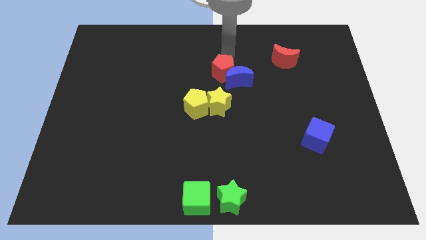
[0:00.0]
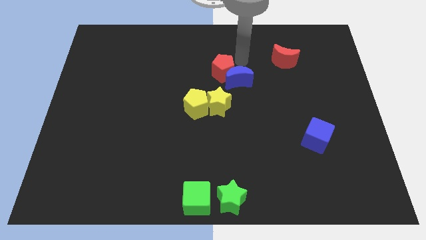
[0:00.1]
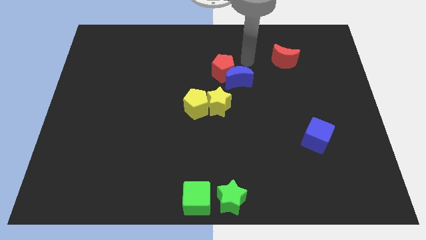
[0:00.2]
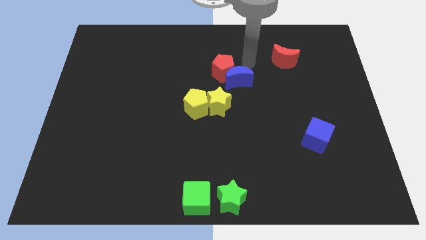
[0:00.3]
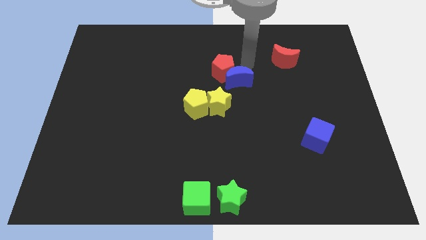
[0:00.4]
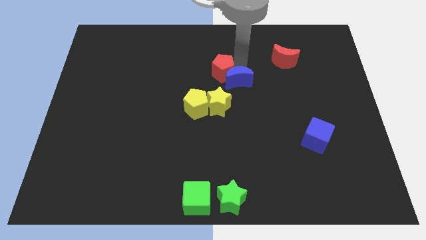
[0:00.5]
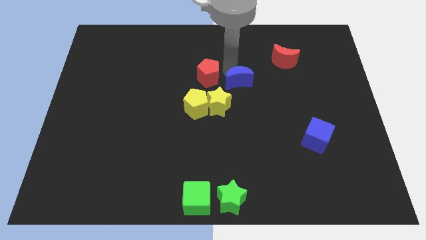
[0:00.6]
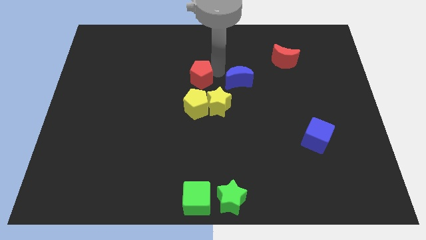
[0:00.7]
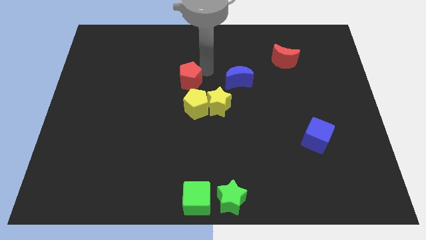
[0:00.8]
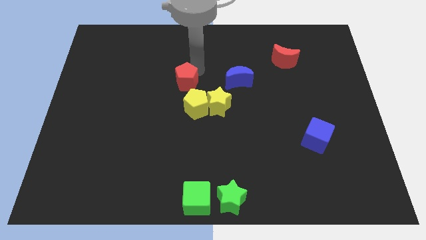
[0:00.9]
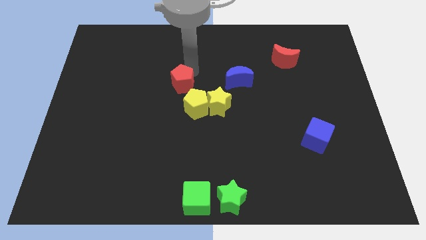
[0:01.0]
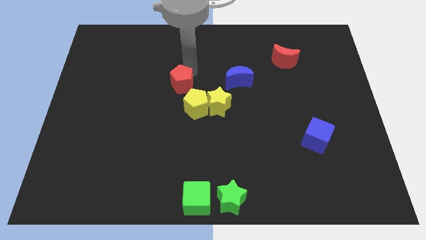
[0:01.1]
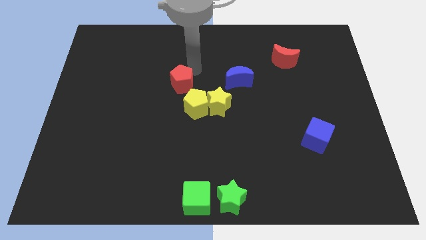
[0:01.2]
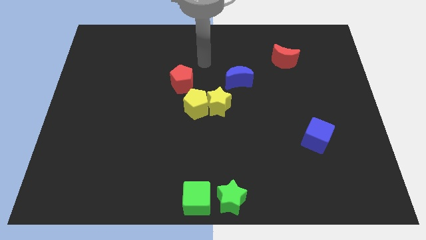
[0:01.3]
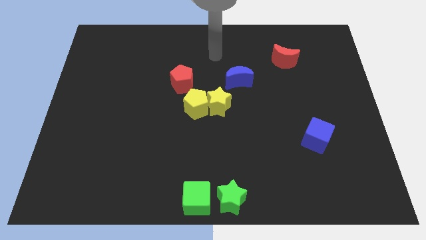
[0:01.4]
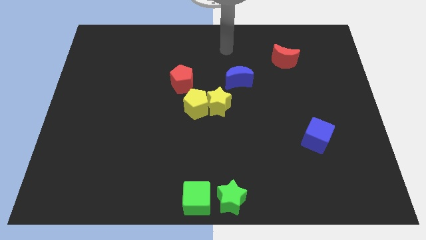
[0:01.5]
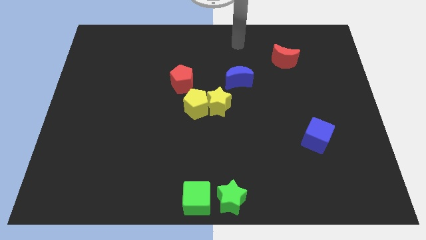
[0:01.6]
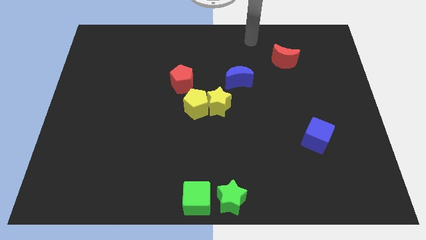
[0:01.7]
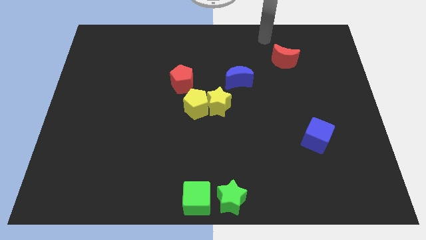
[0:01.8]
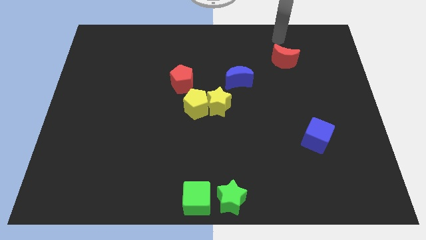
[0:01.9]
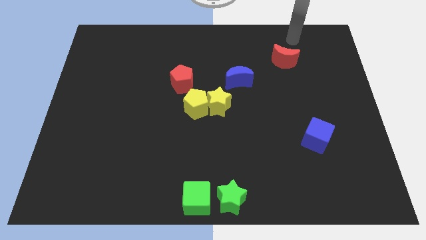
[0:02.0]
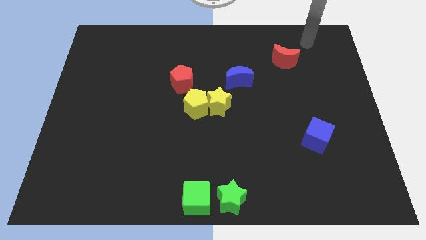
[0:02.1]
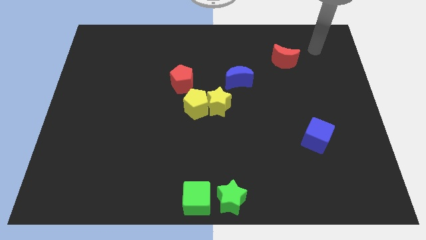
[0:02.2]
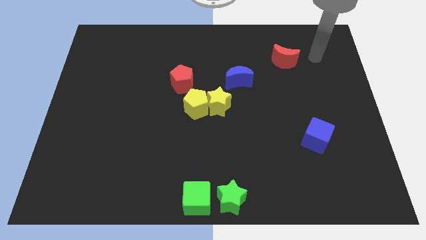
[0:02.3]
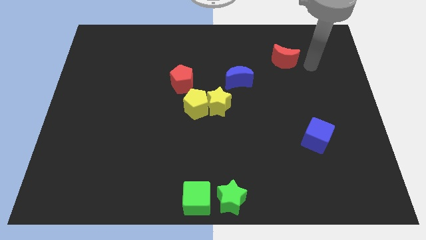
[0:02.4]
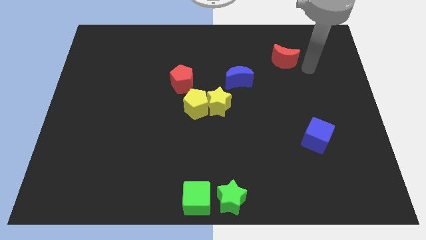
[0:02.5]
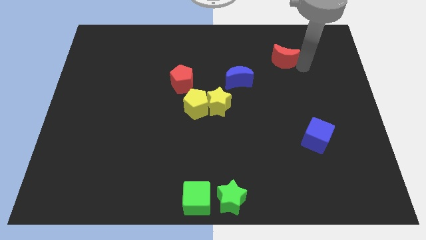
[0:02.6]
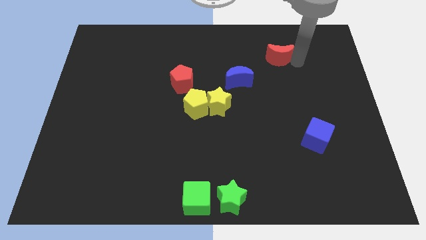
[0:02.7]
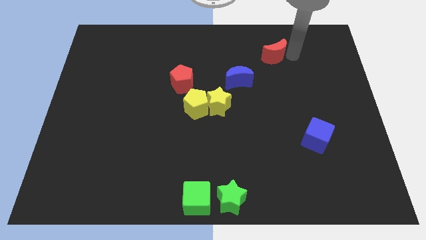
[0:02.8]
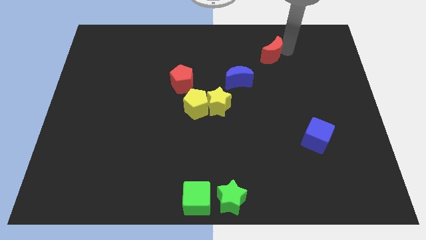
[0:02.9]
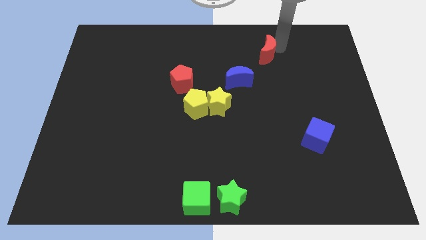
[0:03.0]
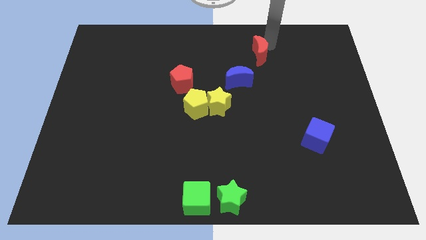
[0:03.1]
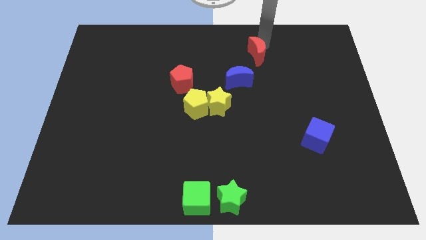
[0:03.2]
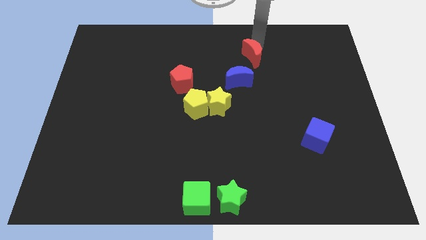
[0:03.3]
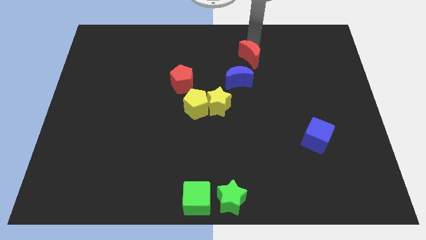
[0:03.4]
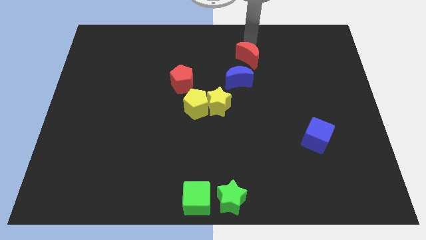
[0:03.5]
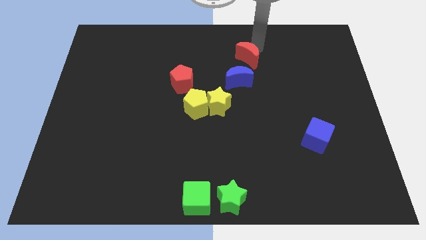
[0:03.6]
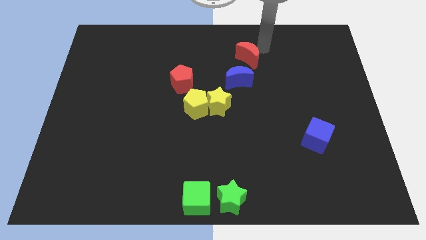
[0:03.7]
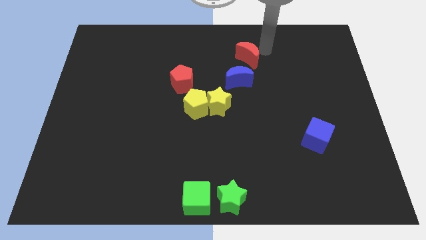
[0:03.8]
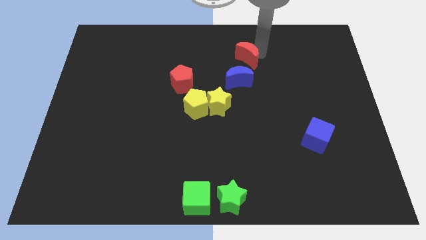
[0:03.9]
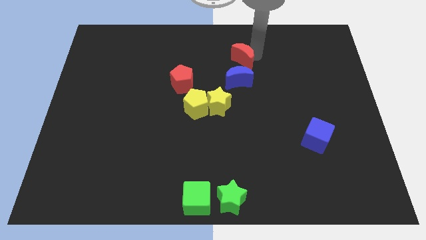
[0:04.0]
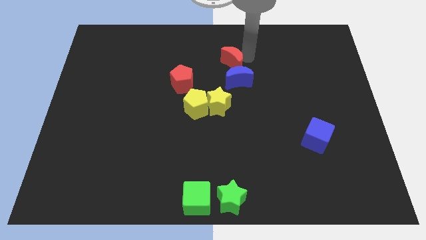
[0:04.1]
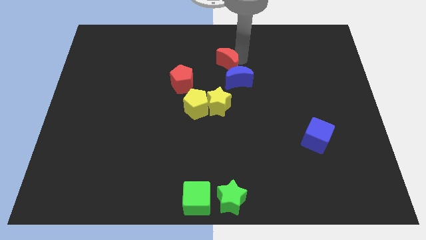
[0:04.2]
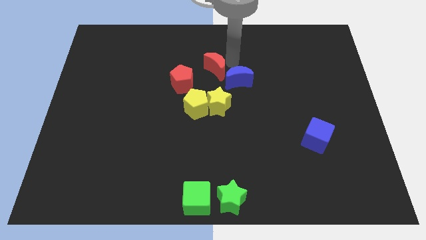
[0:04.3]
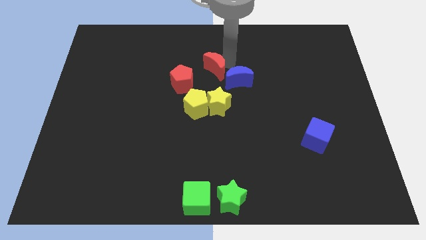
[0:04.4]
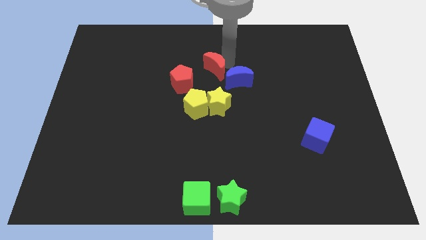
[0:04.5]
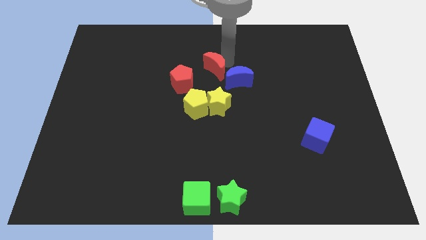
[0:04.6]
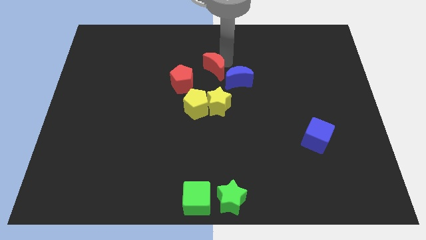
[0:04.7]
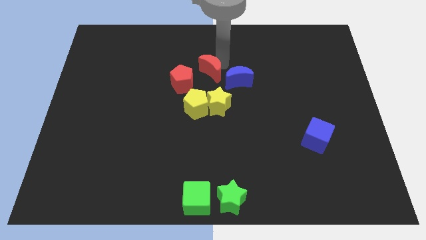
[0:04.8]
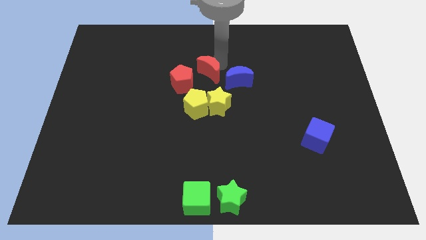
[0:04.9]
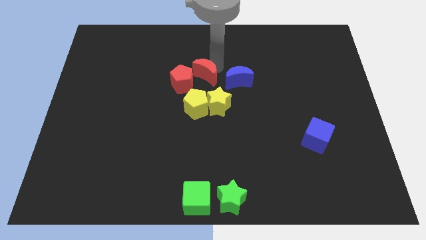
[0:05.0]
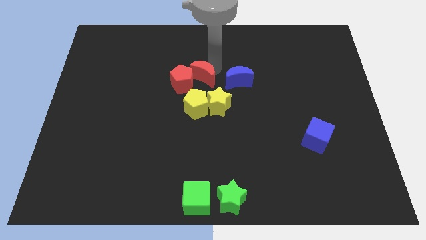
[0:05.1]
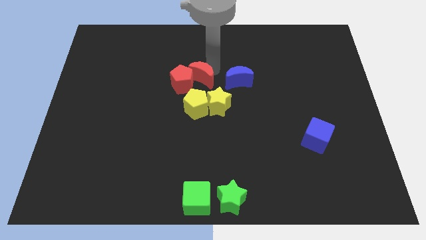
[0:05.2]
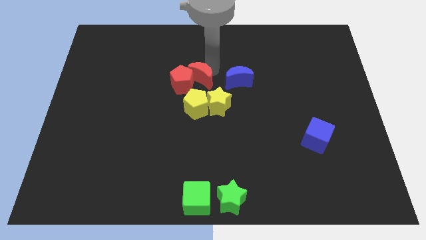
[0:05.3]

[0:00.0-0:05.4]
move red crescent close to red pentagon

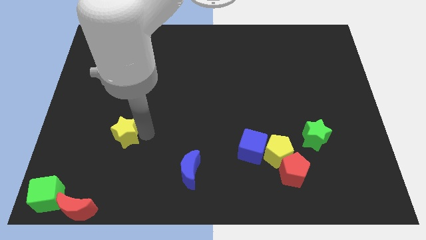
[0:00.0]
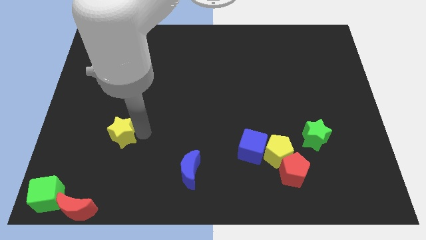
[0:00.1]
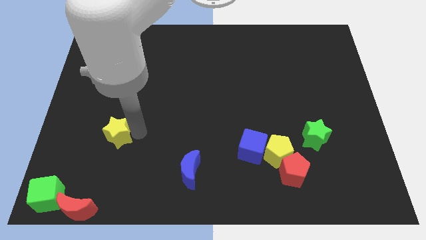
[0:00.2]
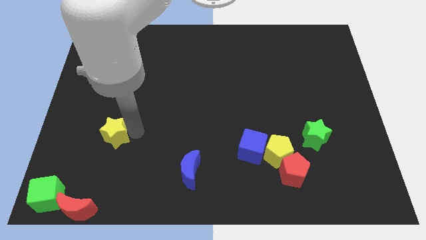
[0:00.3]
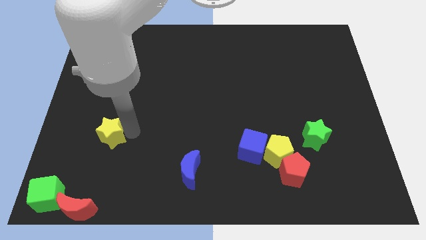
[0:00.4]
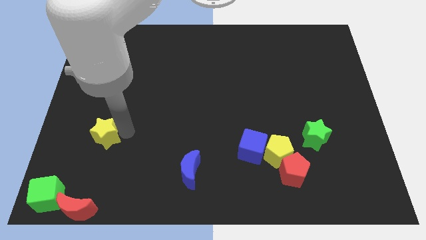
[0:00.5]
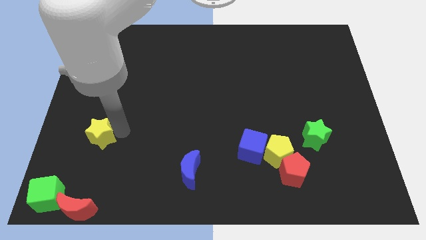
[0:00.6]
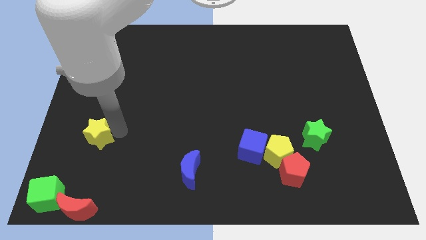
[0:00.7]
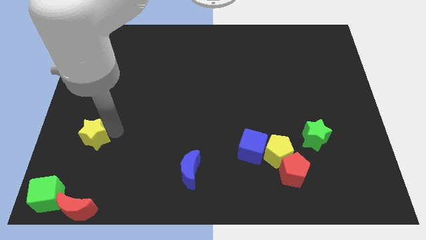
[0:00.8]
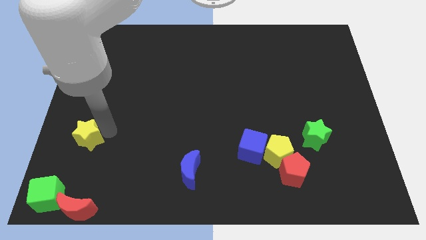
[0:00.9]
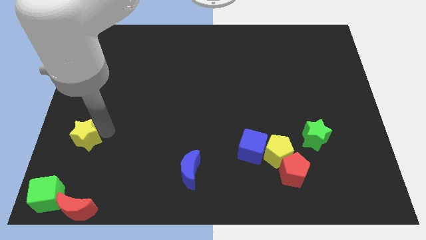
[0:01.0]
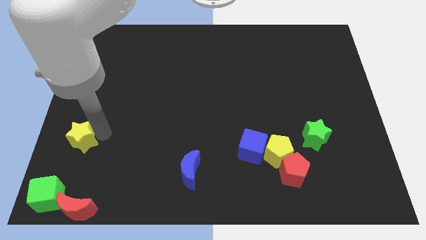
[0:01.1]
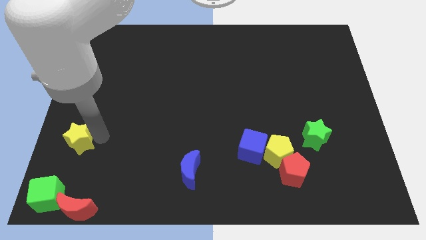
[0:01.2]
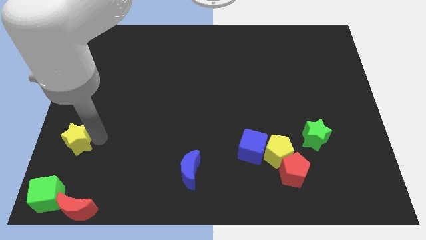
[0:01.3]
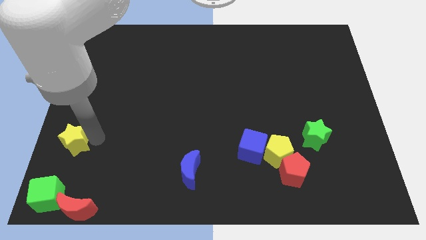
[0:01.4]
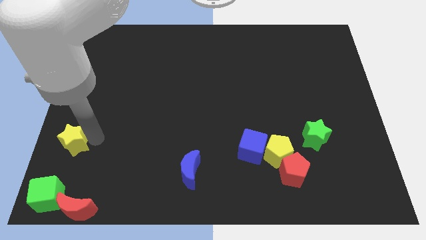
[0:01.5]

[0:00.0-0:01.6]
push the yellow star towards the left side of the board

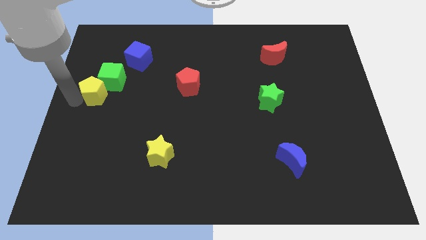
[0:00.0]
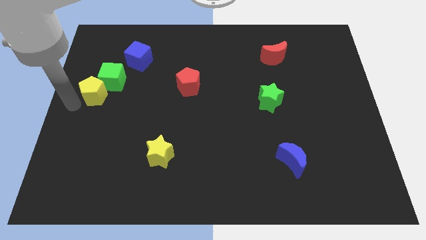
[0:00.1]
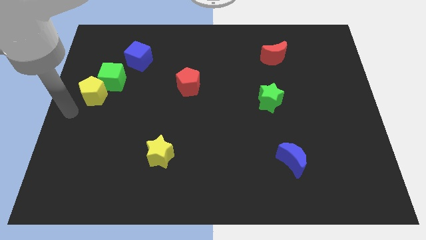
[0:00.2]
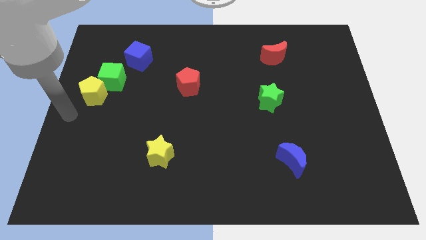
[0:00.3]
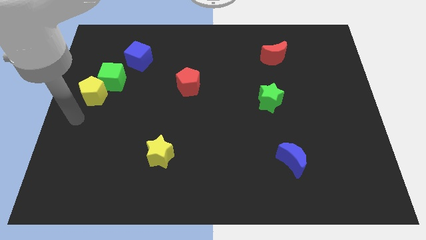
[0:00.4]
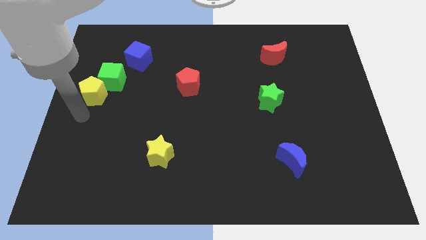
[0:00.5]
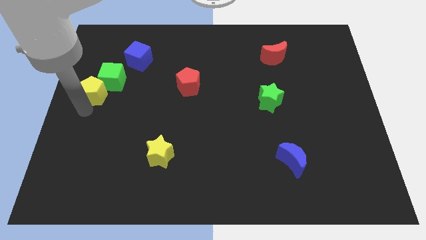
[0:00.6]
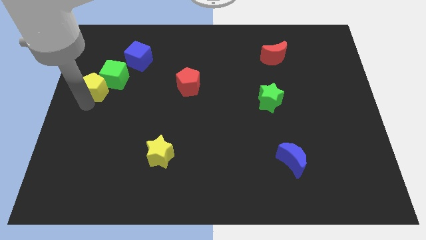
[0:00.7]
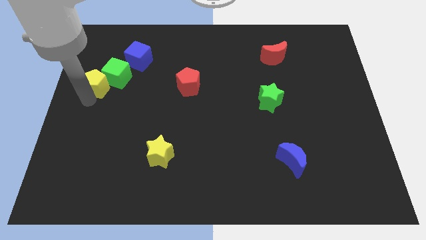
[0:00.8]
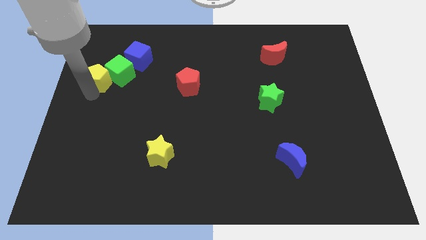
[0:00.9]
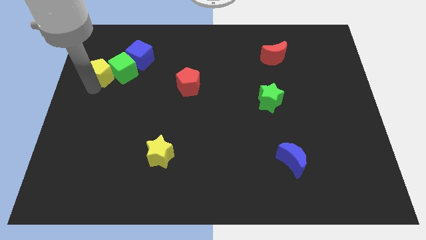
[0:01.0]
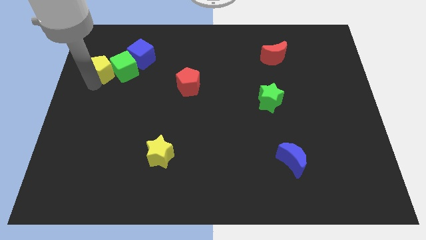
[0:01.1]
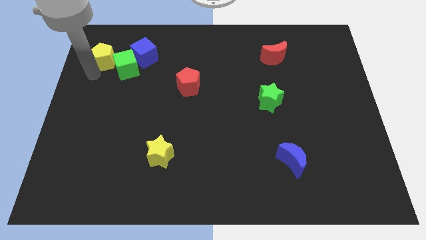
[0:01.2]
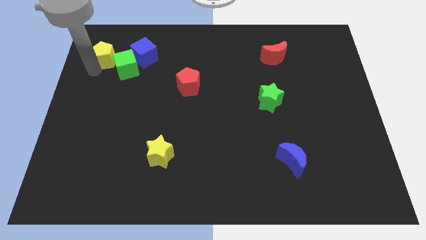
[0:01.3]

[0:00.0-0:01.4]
push the yellow pentagon and cubes towards the top side of the board

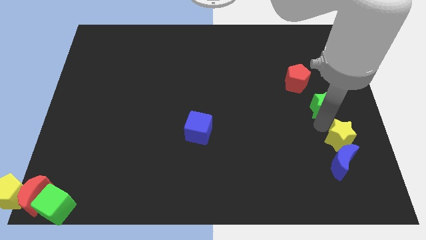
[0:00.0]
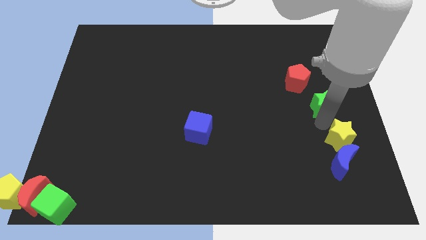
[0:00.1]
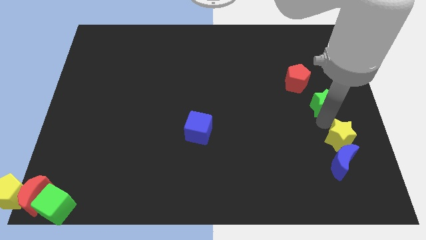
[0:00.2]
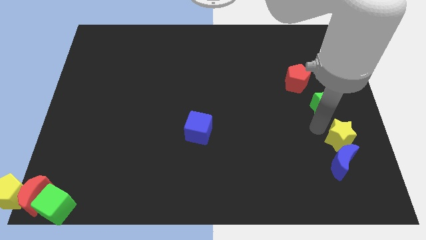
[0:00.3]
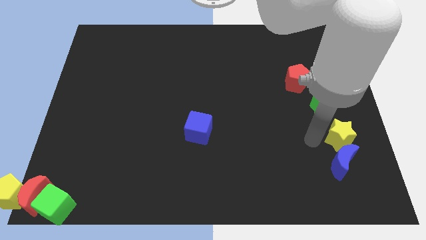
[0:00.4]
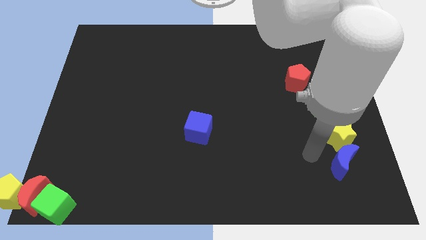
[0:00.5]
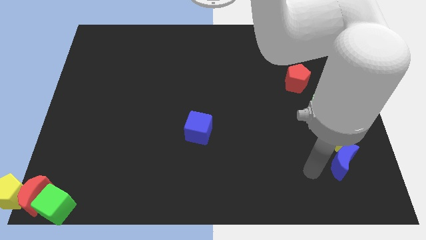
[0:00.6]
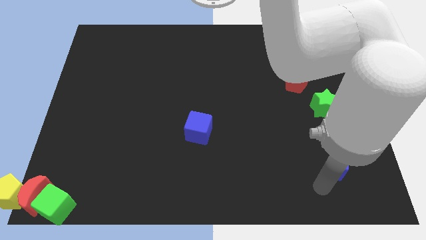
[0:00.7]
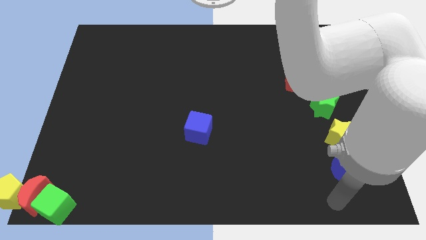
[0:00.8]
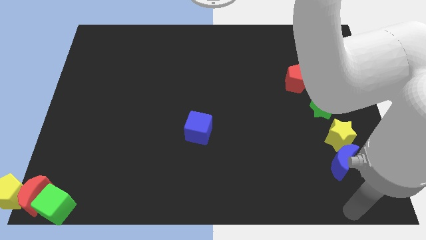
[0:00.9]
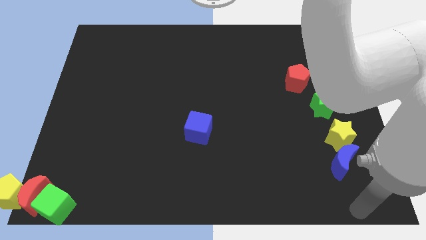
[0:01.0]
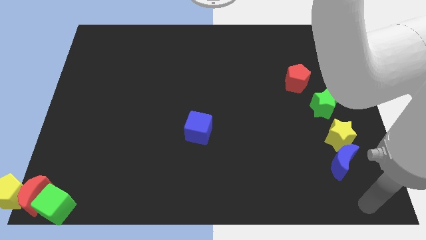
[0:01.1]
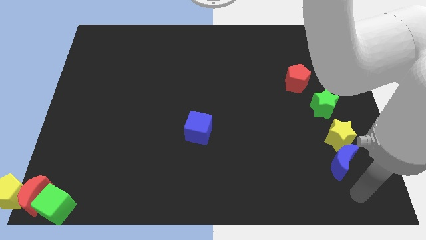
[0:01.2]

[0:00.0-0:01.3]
move your arm away from the green star
